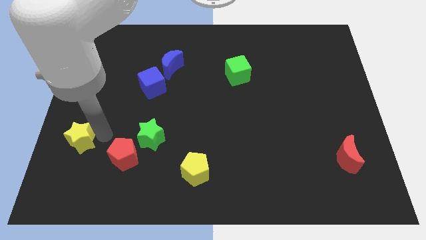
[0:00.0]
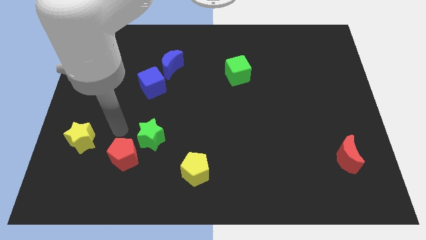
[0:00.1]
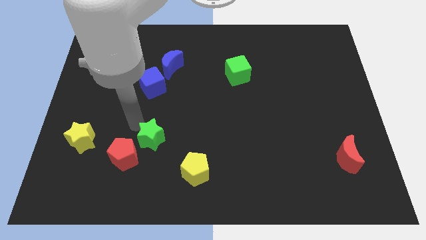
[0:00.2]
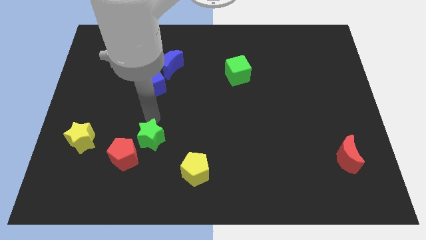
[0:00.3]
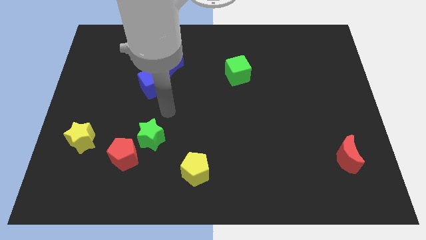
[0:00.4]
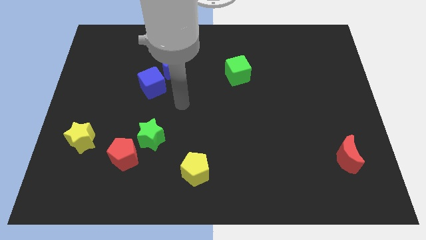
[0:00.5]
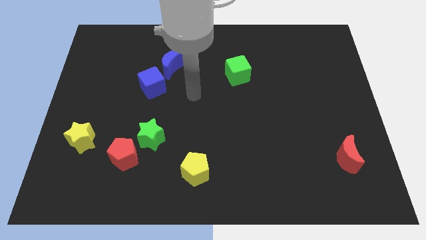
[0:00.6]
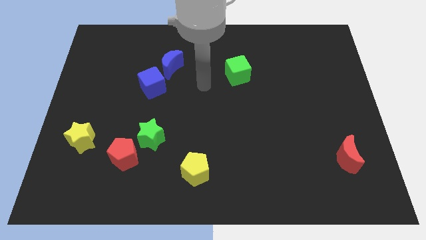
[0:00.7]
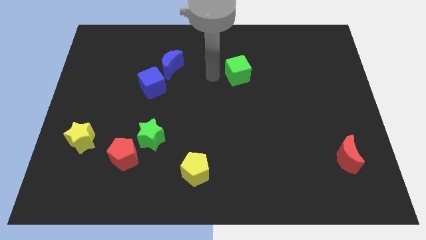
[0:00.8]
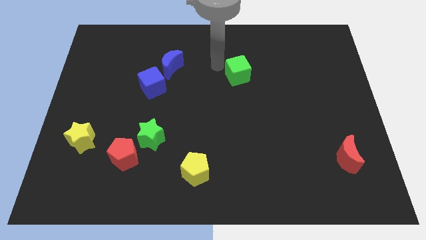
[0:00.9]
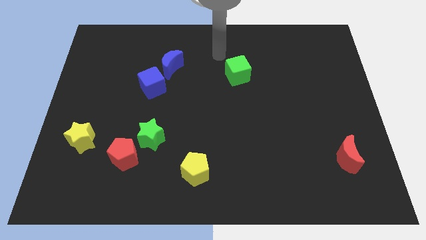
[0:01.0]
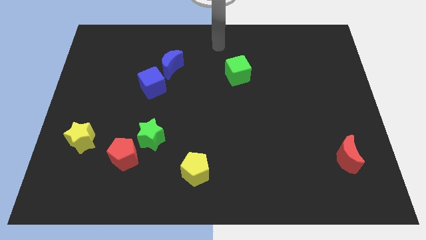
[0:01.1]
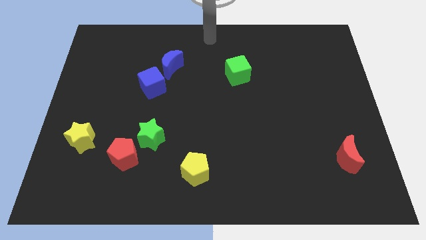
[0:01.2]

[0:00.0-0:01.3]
move your arm away from the yellow star

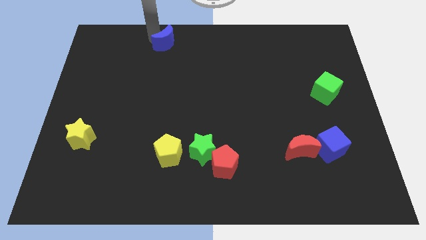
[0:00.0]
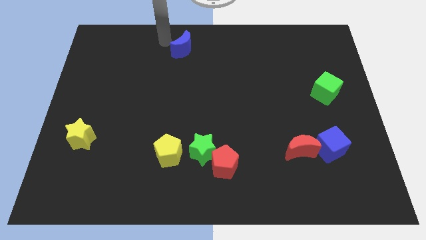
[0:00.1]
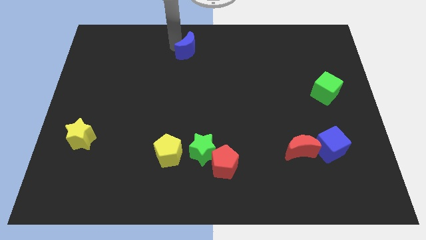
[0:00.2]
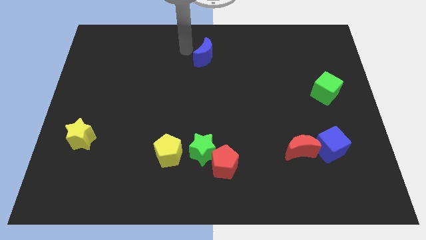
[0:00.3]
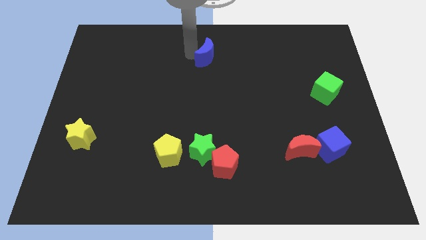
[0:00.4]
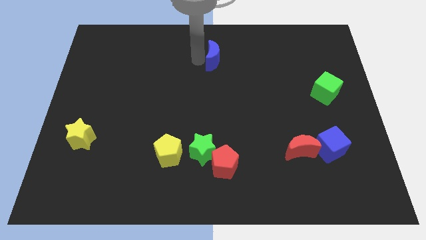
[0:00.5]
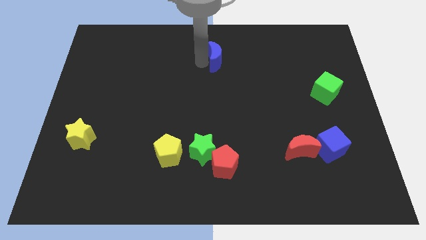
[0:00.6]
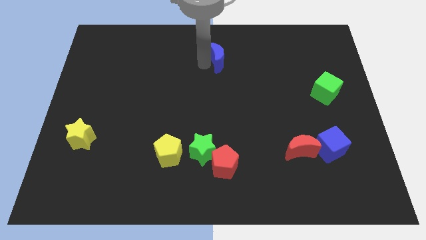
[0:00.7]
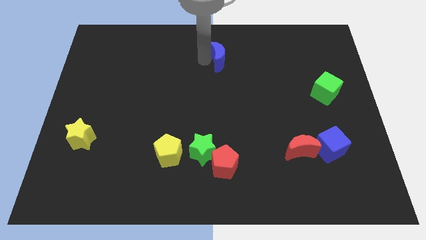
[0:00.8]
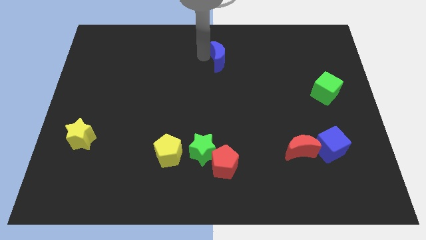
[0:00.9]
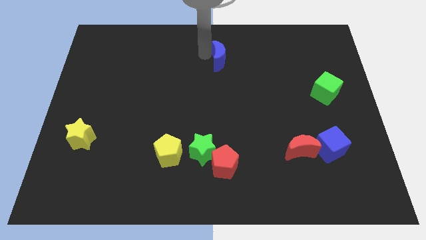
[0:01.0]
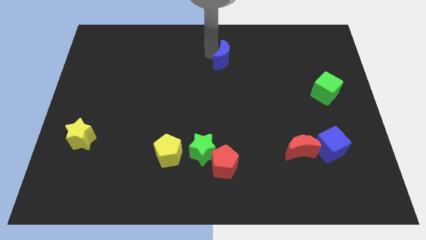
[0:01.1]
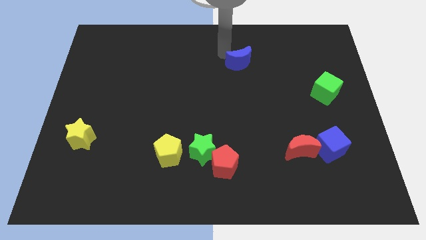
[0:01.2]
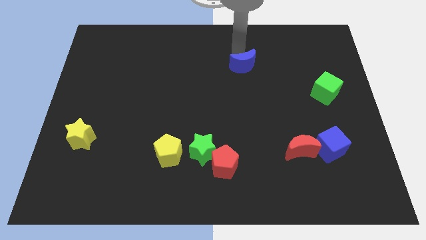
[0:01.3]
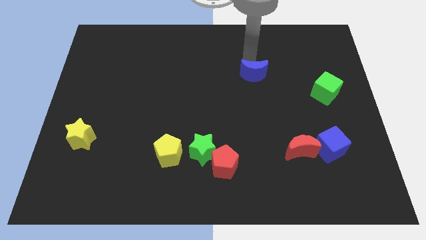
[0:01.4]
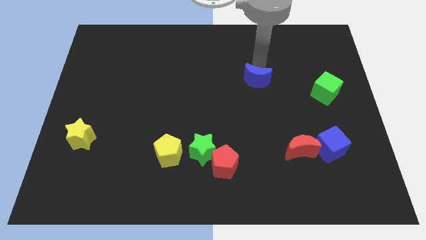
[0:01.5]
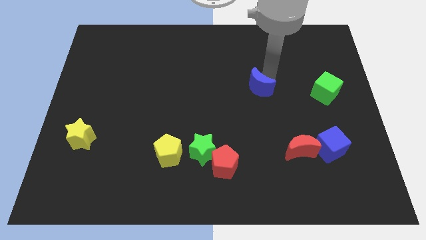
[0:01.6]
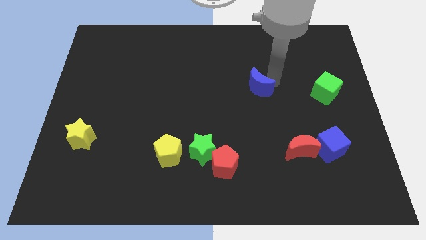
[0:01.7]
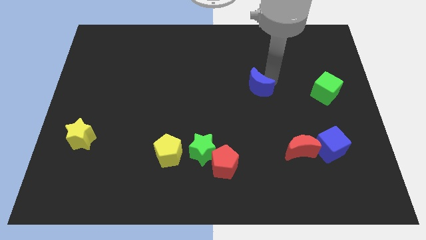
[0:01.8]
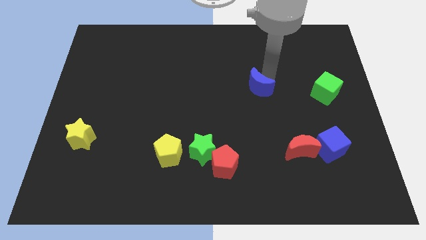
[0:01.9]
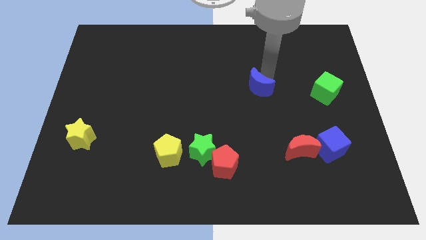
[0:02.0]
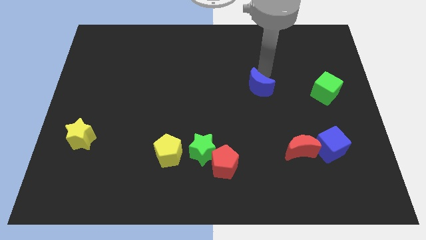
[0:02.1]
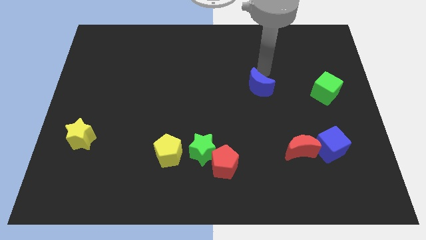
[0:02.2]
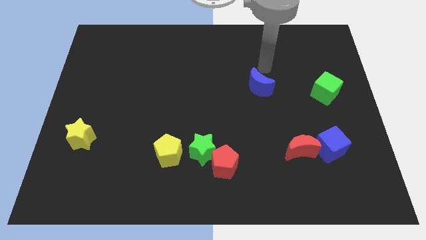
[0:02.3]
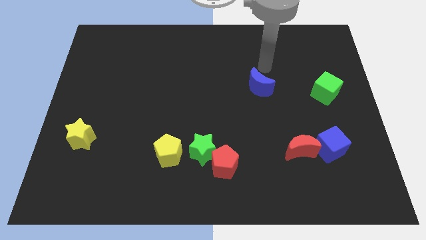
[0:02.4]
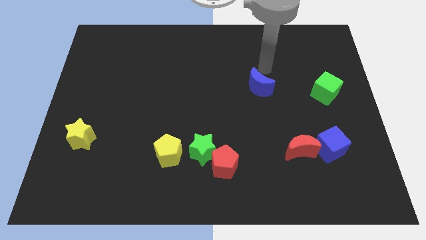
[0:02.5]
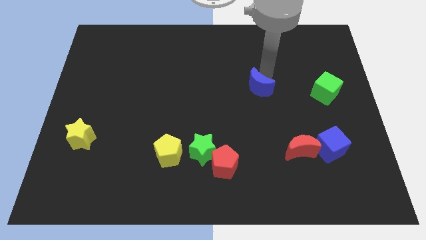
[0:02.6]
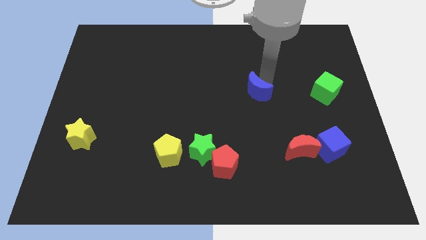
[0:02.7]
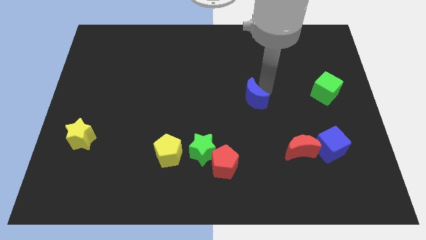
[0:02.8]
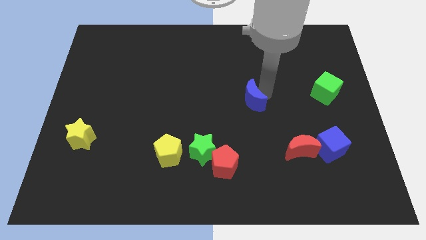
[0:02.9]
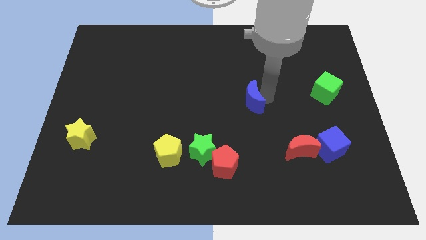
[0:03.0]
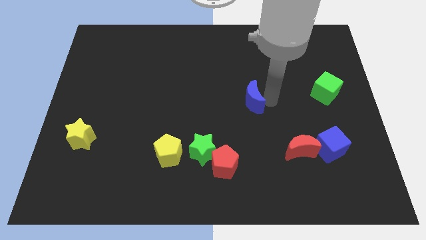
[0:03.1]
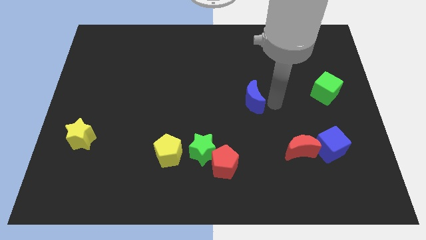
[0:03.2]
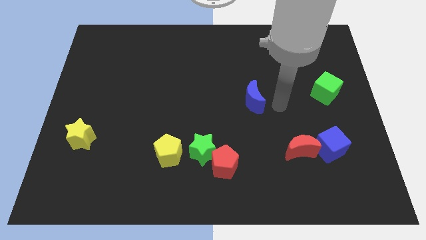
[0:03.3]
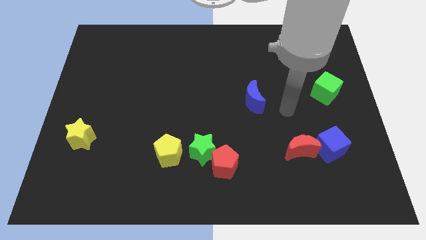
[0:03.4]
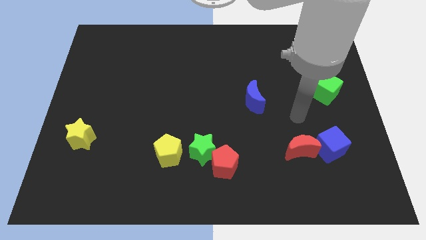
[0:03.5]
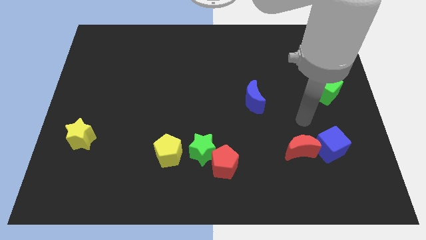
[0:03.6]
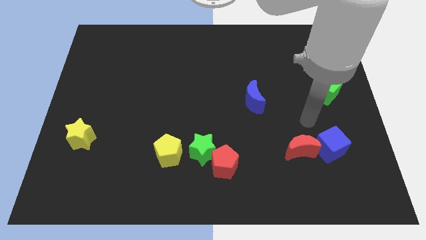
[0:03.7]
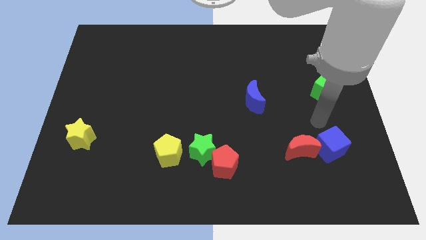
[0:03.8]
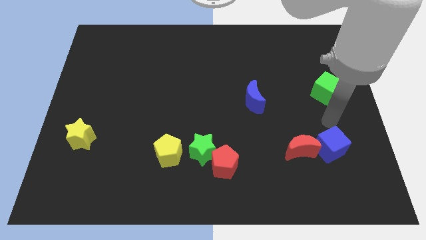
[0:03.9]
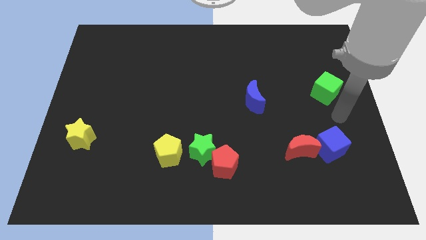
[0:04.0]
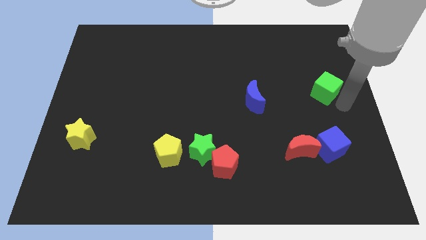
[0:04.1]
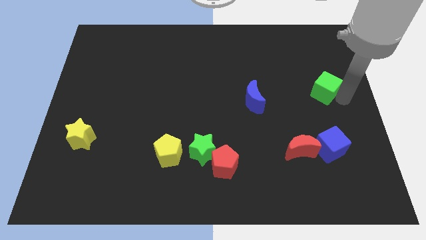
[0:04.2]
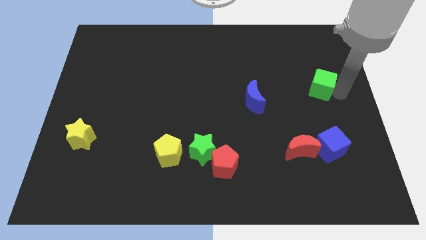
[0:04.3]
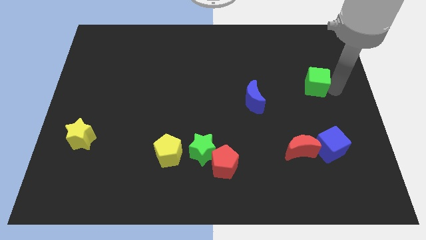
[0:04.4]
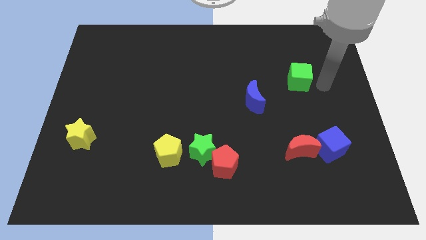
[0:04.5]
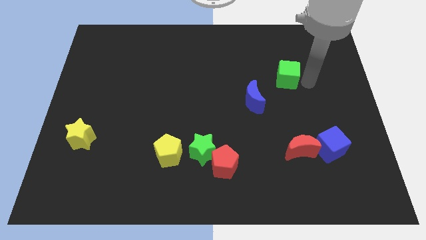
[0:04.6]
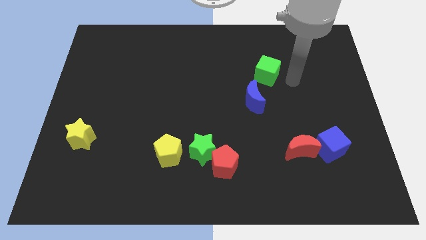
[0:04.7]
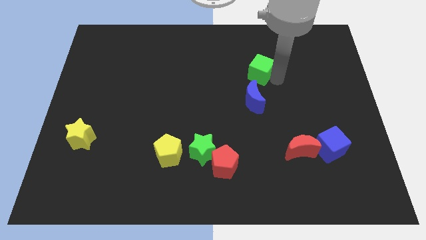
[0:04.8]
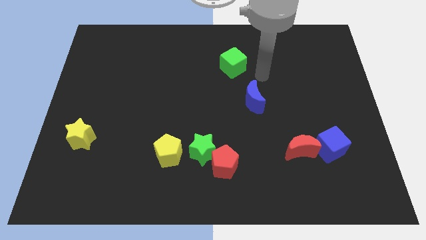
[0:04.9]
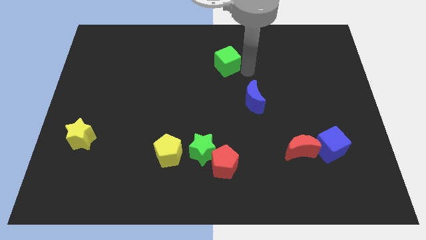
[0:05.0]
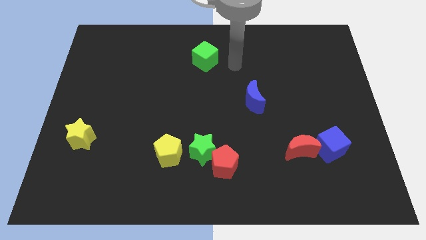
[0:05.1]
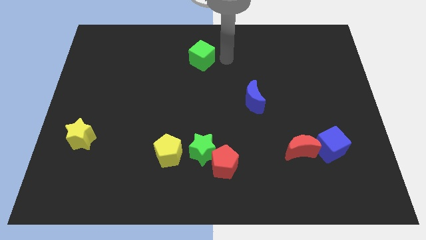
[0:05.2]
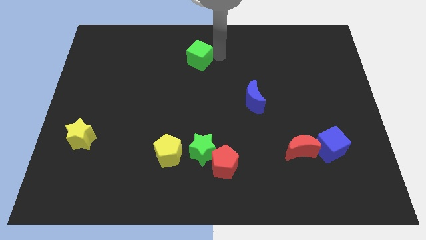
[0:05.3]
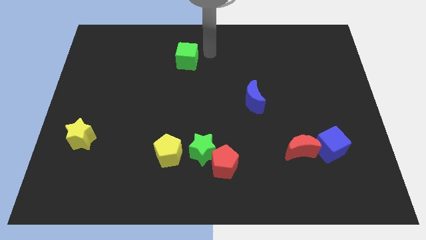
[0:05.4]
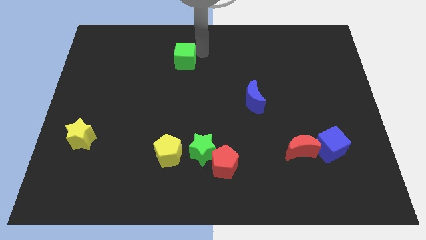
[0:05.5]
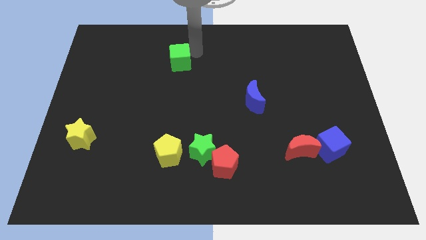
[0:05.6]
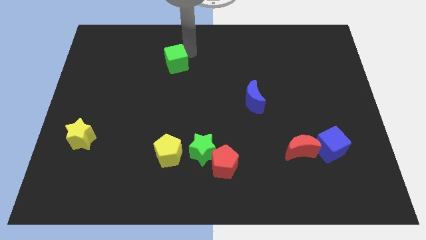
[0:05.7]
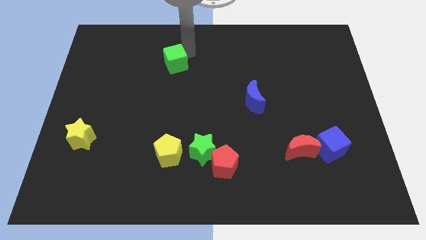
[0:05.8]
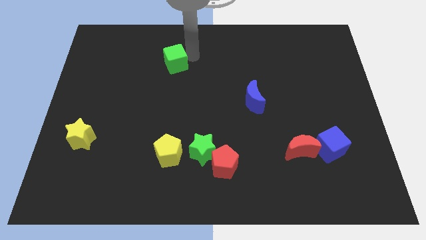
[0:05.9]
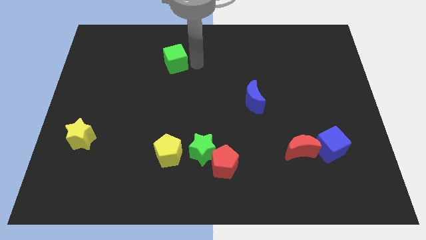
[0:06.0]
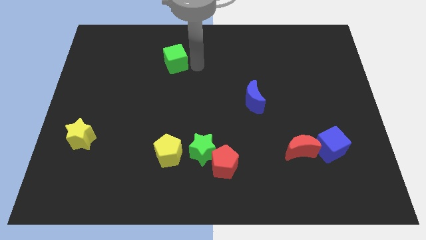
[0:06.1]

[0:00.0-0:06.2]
place the blue moon diagonally to the red moon

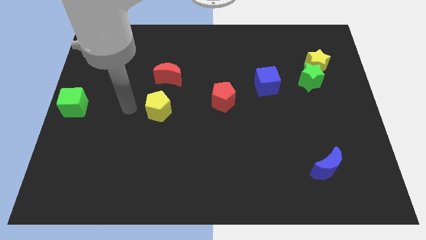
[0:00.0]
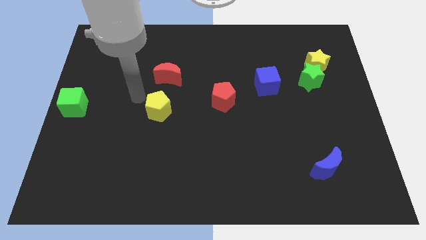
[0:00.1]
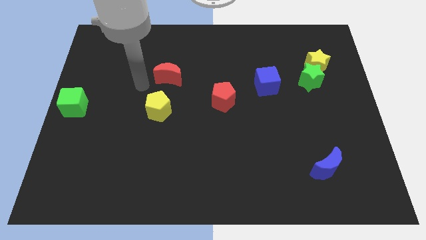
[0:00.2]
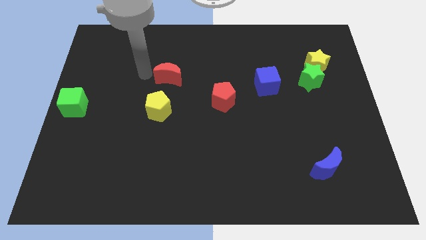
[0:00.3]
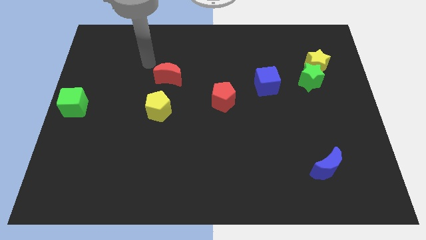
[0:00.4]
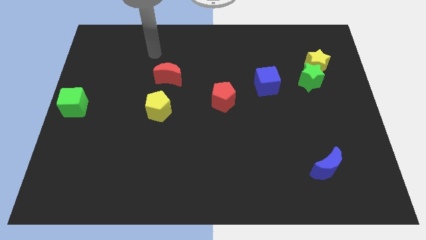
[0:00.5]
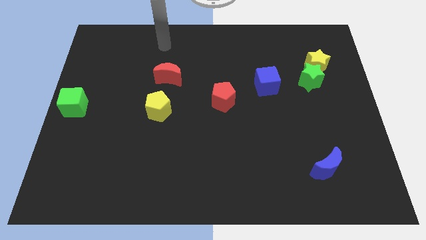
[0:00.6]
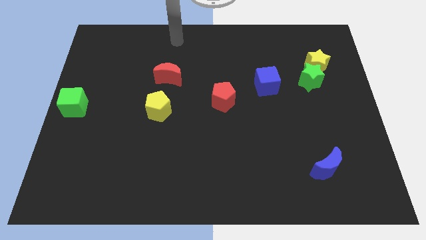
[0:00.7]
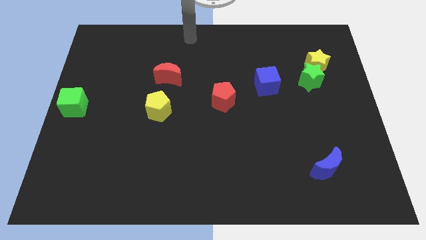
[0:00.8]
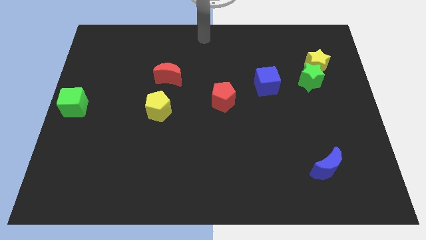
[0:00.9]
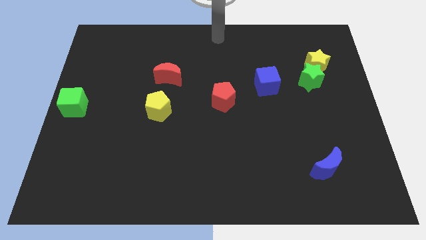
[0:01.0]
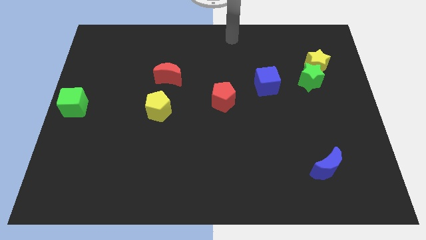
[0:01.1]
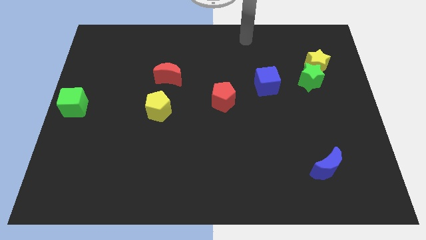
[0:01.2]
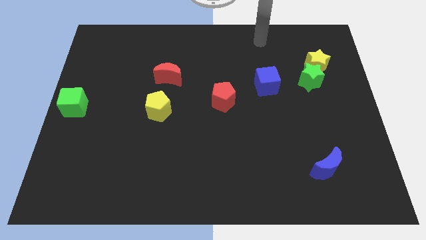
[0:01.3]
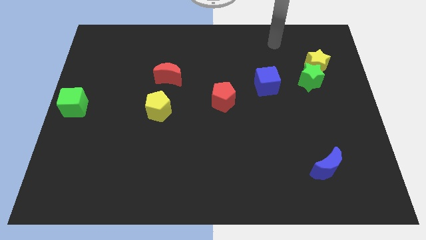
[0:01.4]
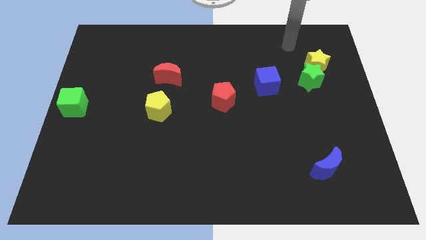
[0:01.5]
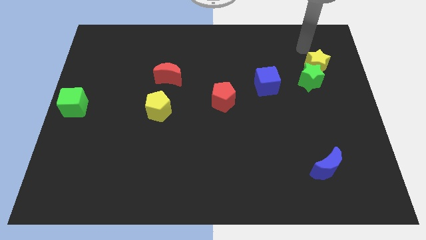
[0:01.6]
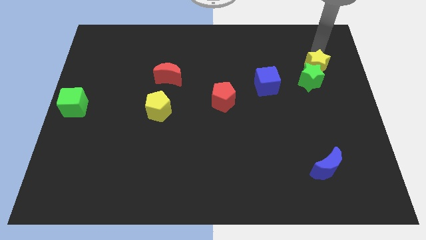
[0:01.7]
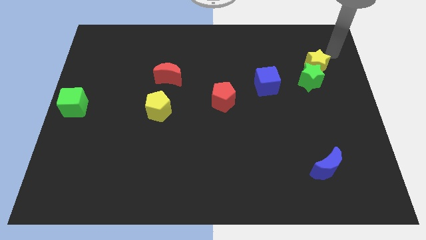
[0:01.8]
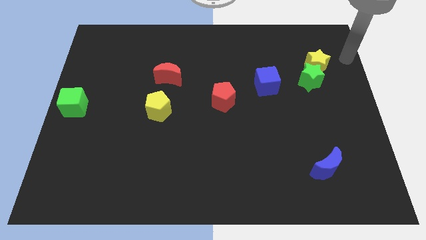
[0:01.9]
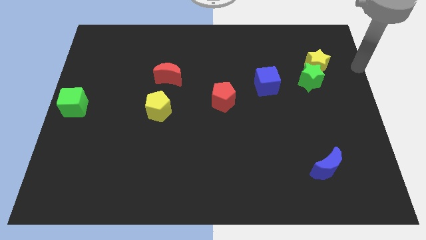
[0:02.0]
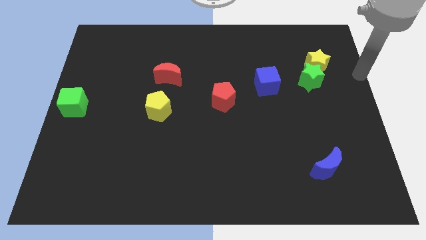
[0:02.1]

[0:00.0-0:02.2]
point your hand to the right of the yellow star
